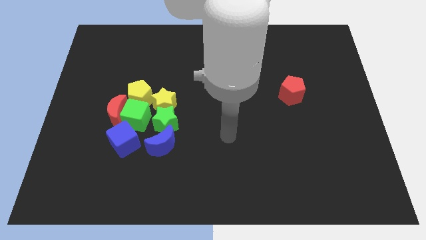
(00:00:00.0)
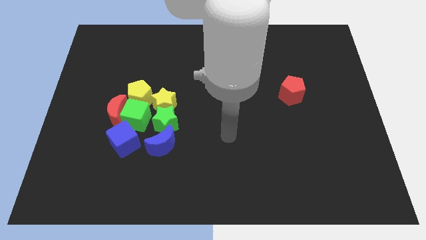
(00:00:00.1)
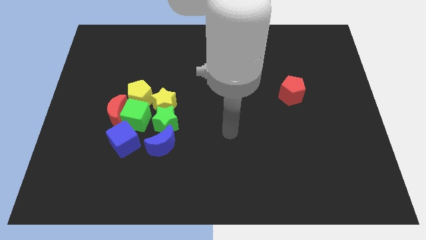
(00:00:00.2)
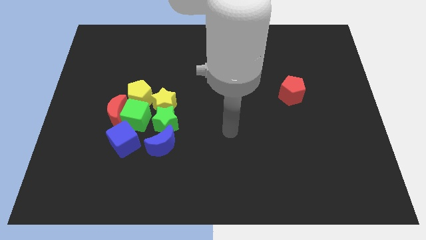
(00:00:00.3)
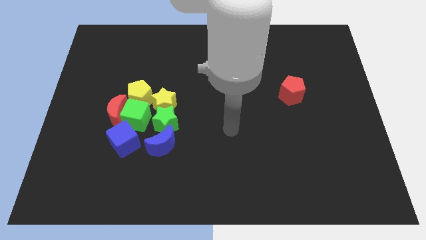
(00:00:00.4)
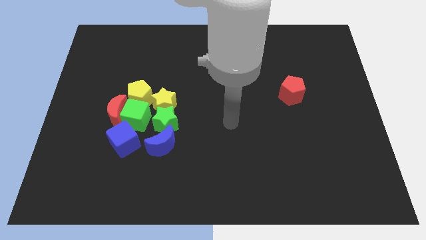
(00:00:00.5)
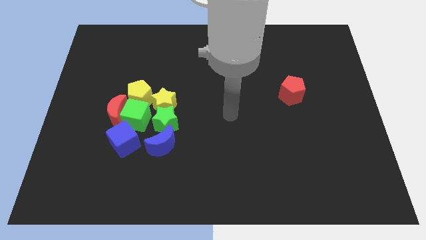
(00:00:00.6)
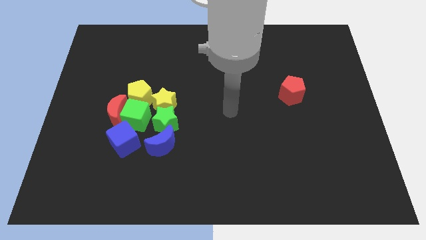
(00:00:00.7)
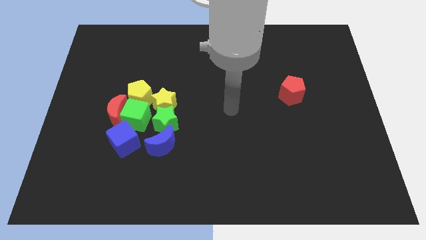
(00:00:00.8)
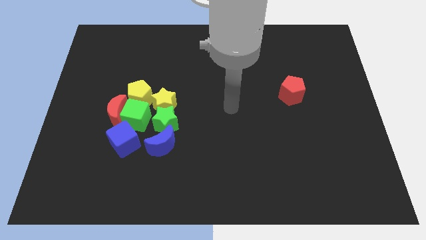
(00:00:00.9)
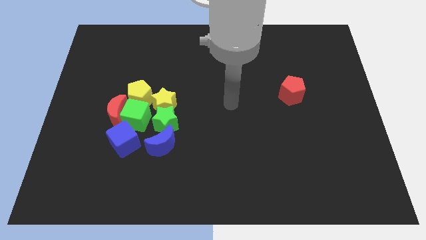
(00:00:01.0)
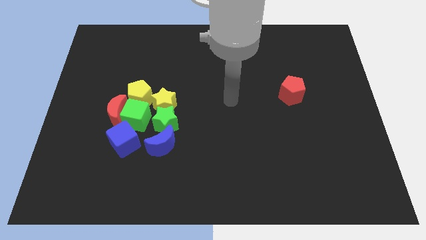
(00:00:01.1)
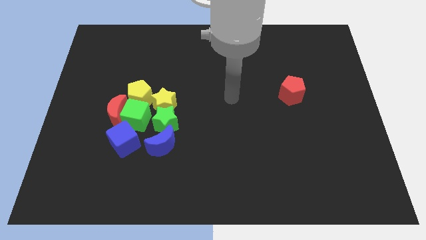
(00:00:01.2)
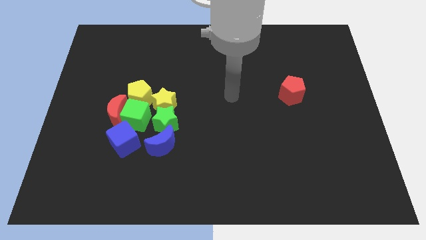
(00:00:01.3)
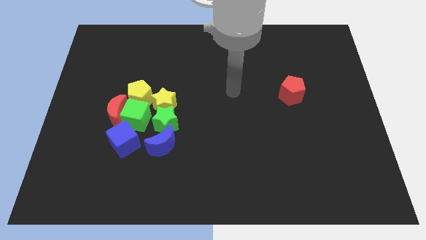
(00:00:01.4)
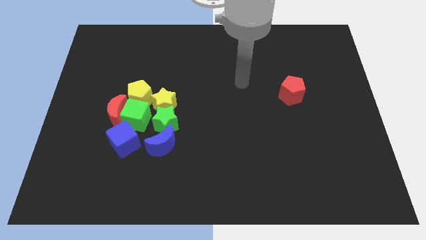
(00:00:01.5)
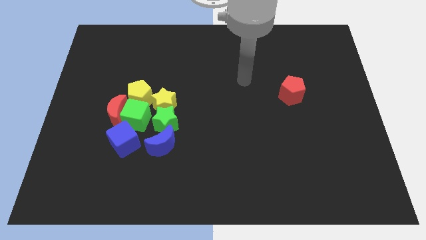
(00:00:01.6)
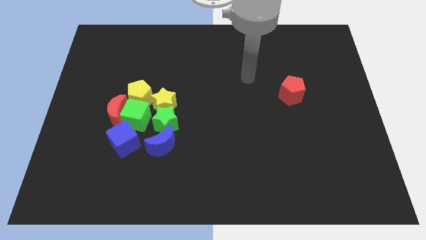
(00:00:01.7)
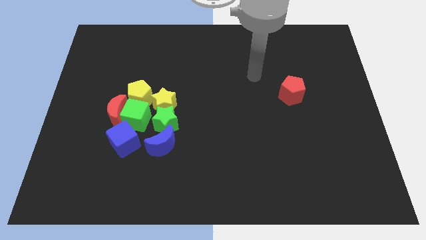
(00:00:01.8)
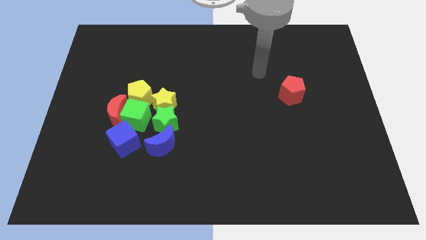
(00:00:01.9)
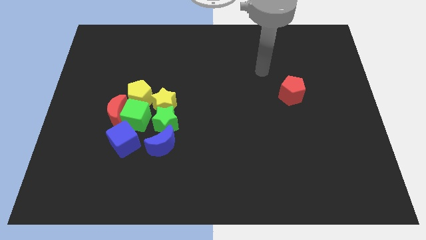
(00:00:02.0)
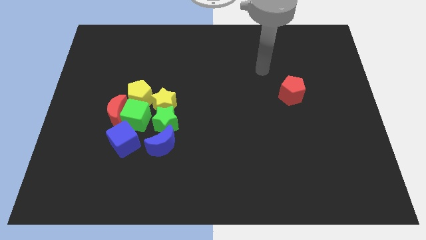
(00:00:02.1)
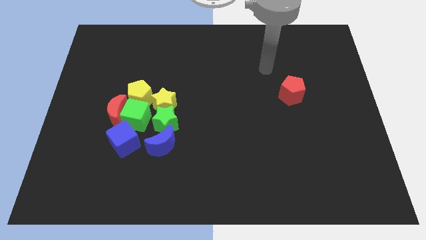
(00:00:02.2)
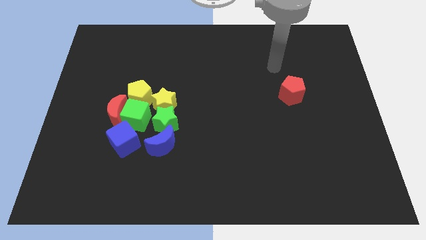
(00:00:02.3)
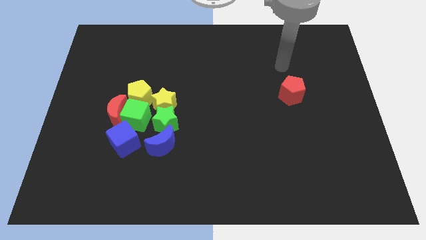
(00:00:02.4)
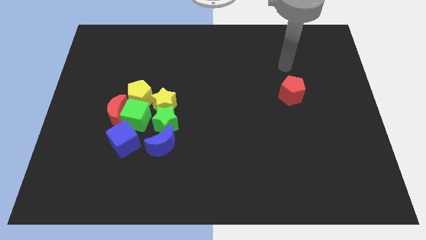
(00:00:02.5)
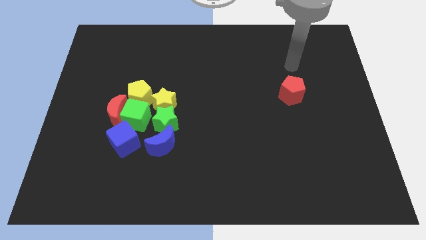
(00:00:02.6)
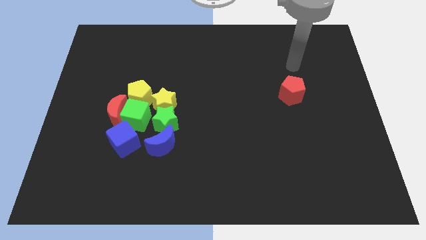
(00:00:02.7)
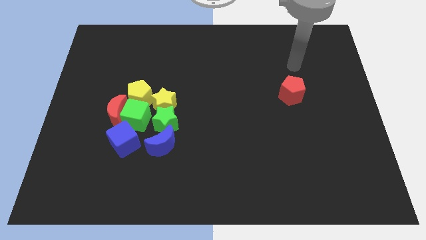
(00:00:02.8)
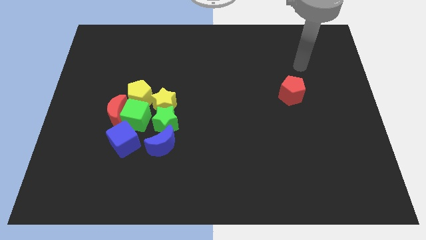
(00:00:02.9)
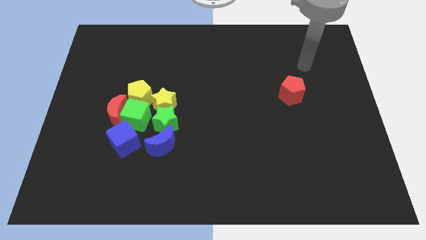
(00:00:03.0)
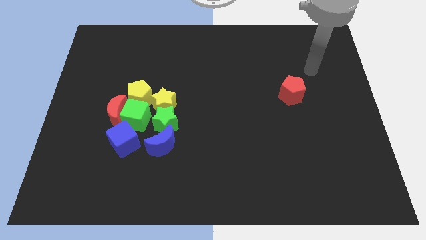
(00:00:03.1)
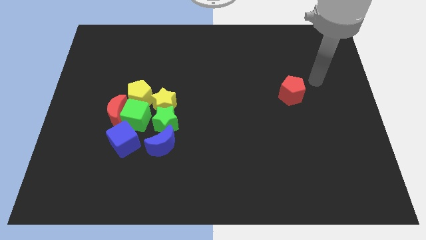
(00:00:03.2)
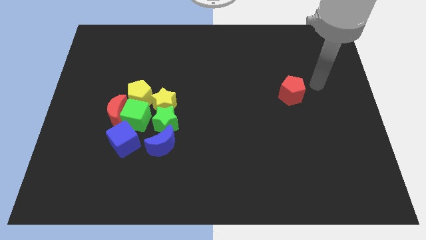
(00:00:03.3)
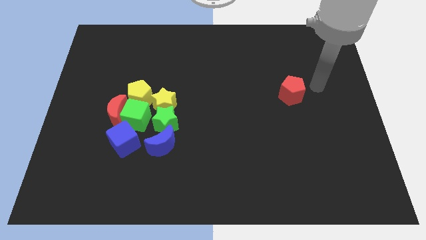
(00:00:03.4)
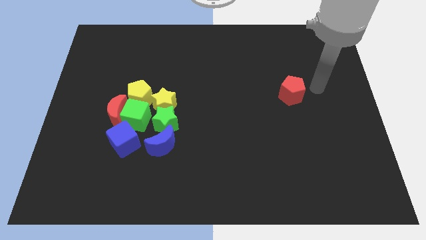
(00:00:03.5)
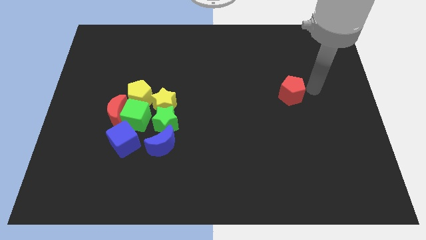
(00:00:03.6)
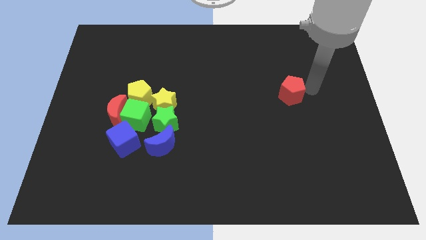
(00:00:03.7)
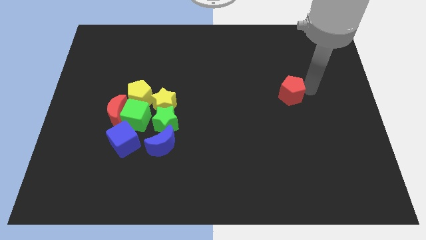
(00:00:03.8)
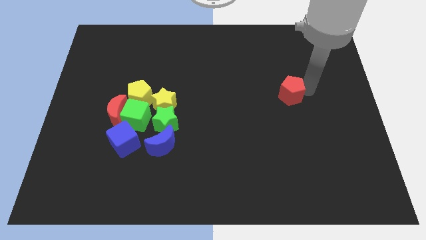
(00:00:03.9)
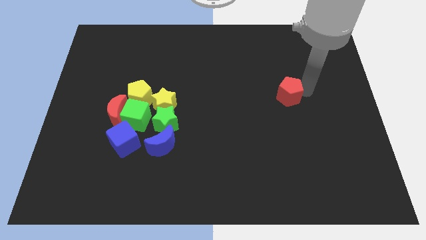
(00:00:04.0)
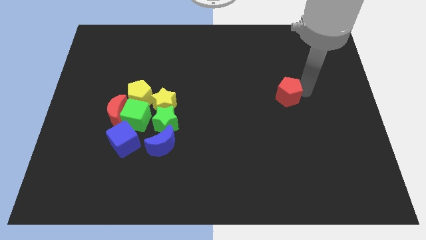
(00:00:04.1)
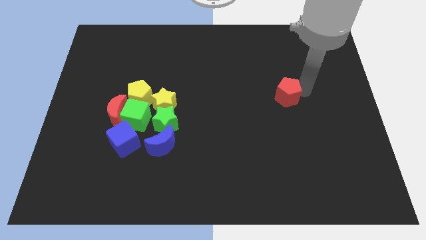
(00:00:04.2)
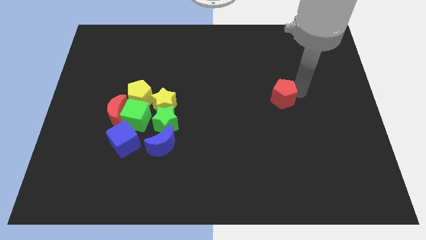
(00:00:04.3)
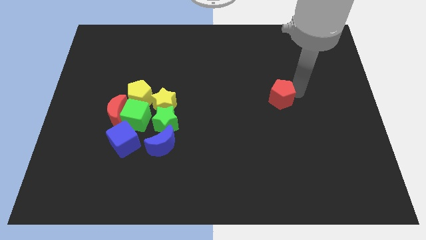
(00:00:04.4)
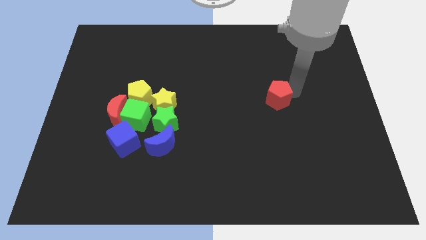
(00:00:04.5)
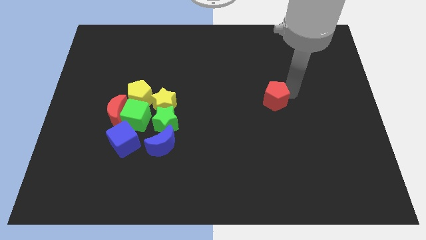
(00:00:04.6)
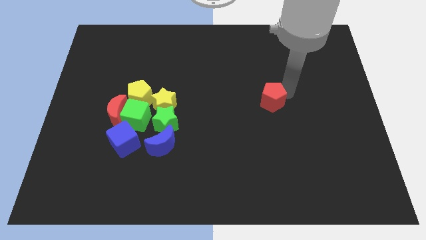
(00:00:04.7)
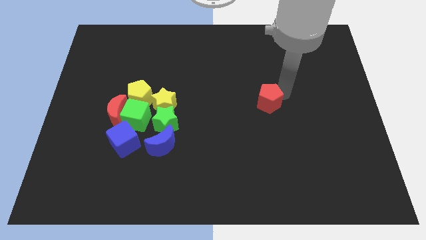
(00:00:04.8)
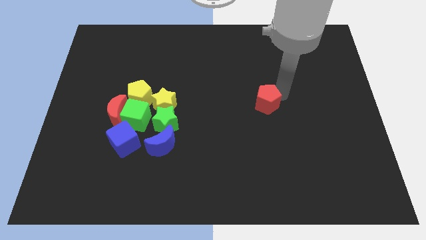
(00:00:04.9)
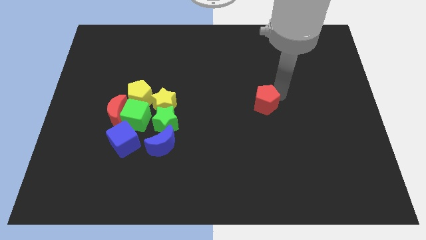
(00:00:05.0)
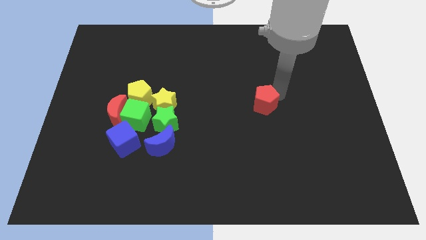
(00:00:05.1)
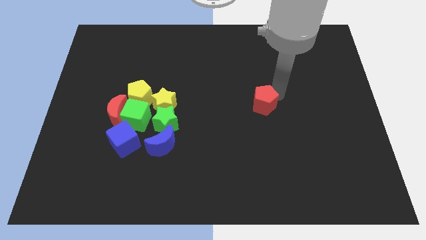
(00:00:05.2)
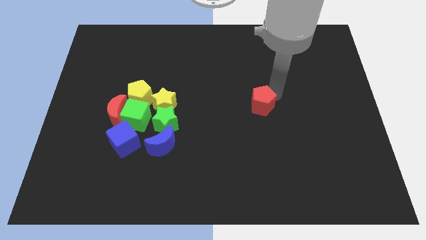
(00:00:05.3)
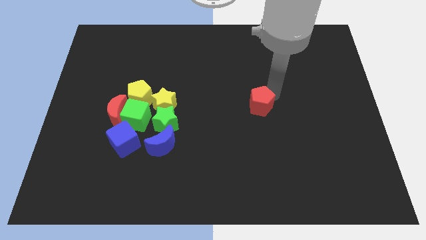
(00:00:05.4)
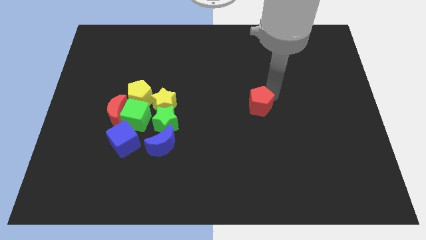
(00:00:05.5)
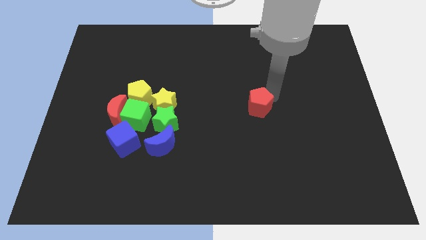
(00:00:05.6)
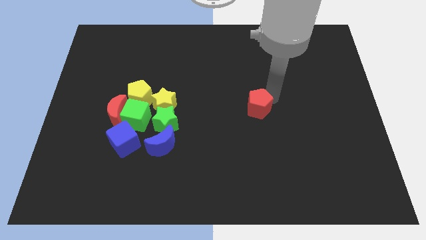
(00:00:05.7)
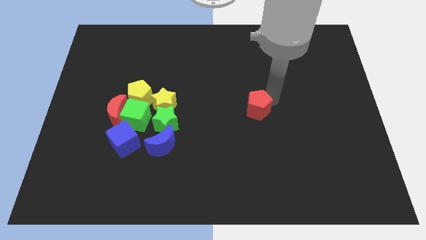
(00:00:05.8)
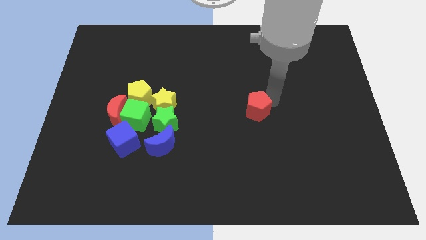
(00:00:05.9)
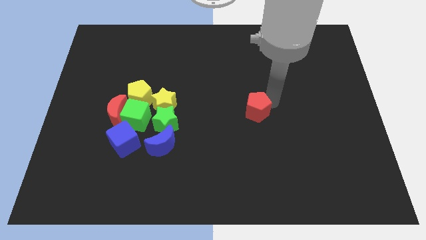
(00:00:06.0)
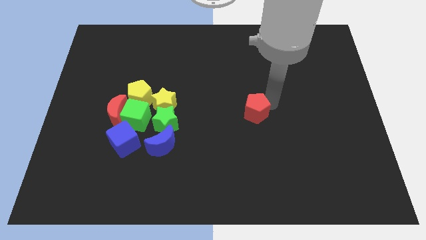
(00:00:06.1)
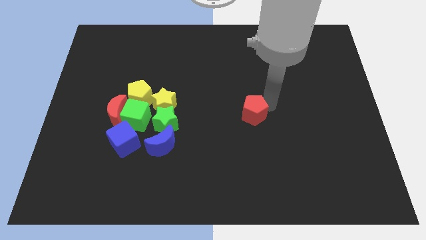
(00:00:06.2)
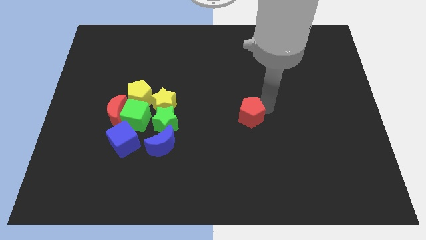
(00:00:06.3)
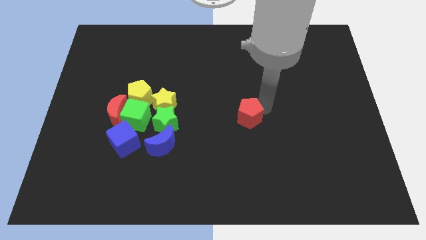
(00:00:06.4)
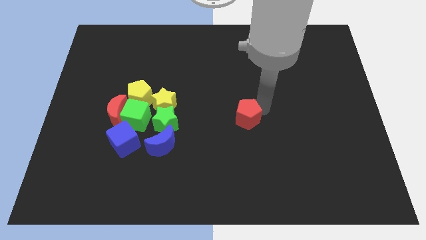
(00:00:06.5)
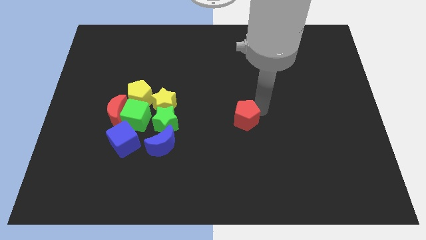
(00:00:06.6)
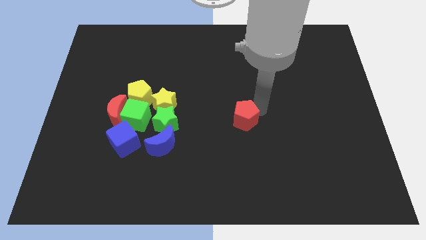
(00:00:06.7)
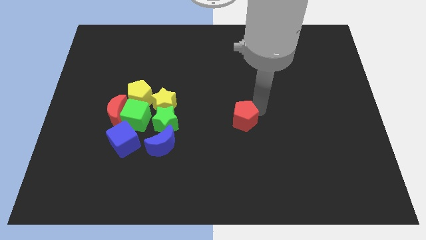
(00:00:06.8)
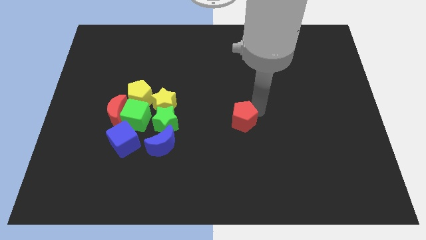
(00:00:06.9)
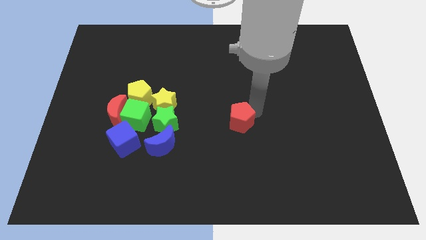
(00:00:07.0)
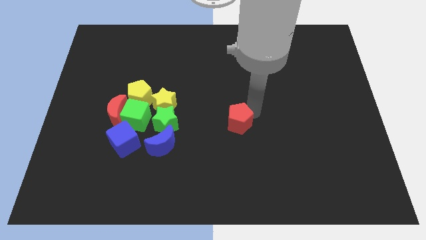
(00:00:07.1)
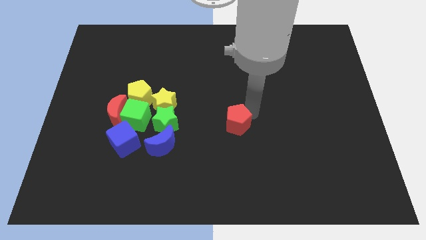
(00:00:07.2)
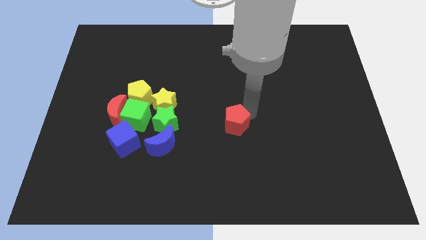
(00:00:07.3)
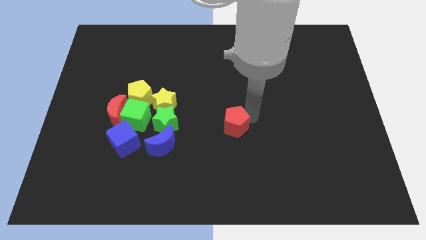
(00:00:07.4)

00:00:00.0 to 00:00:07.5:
move the red pentagon to the center of the board

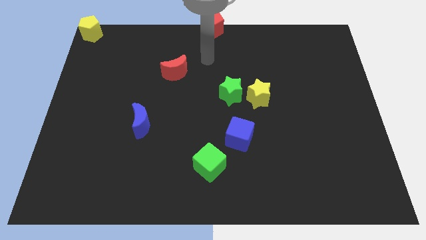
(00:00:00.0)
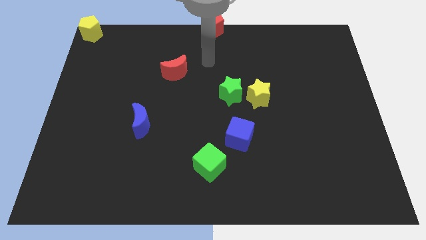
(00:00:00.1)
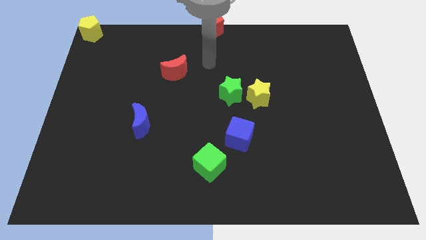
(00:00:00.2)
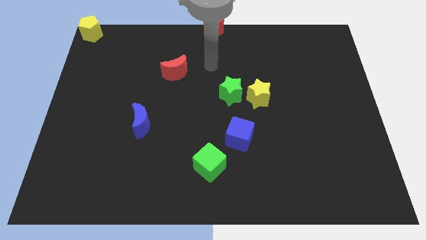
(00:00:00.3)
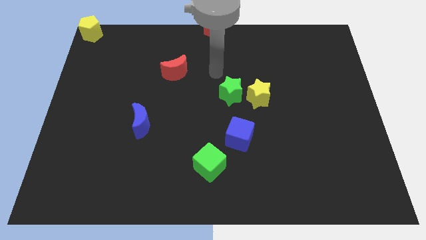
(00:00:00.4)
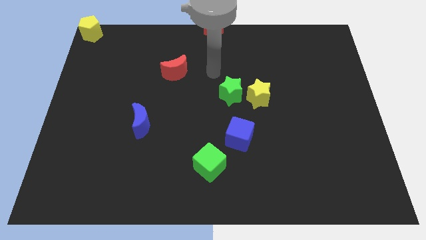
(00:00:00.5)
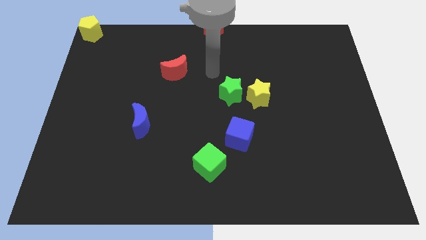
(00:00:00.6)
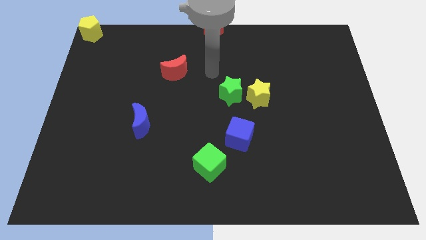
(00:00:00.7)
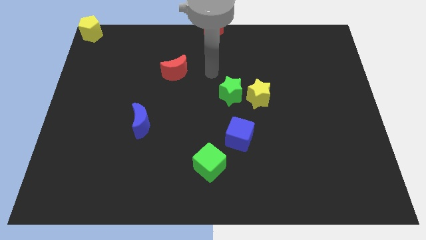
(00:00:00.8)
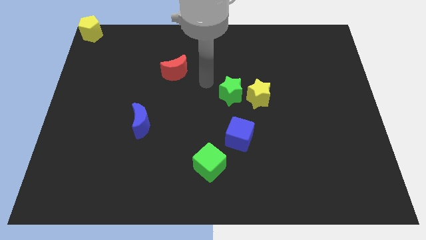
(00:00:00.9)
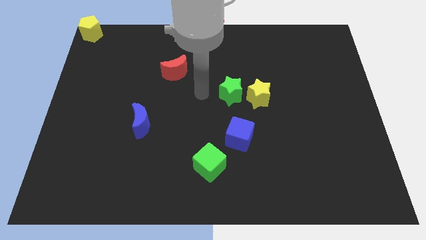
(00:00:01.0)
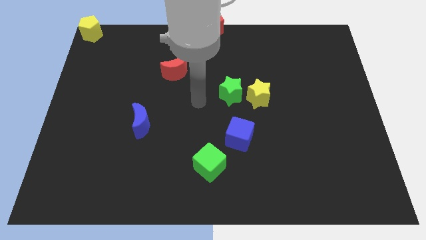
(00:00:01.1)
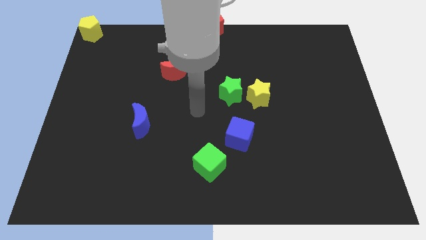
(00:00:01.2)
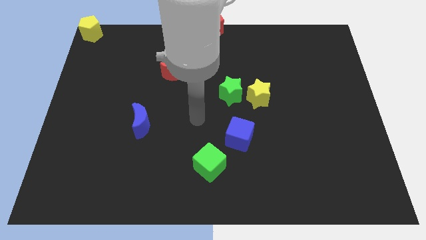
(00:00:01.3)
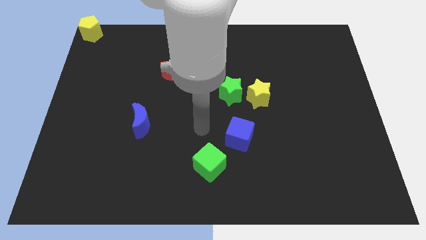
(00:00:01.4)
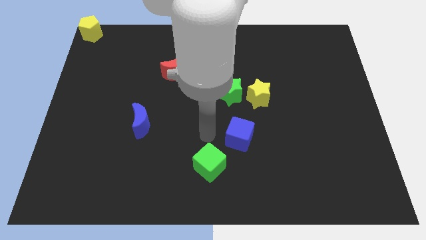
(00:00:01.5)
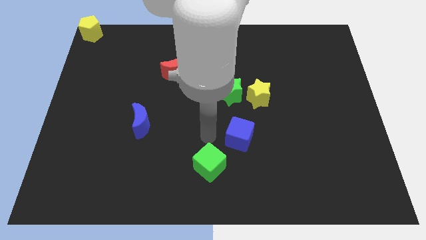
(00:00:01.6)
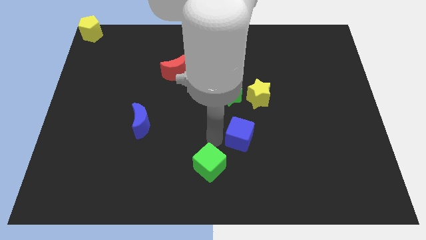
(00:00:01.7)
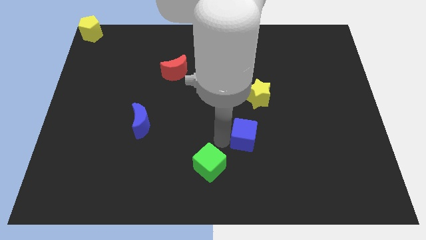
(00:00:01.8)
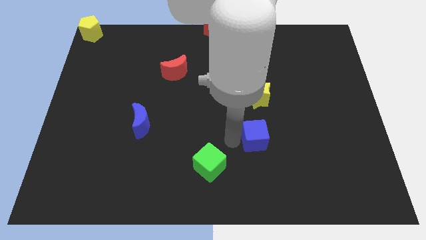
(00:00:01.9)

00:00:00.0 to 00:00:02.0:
drag the blue cube vertically below the yellow star
